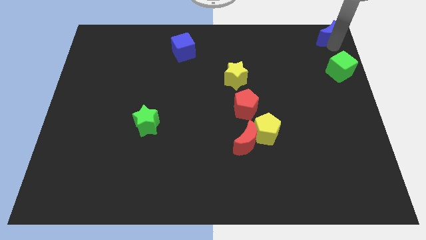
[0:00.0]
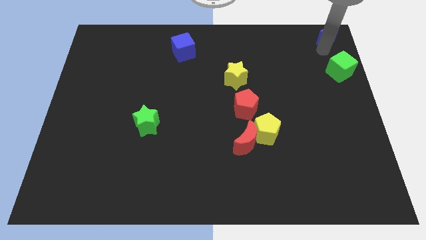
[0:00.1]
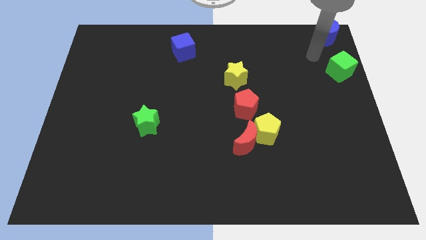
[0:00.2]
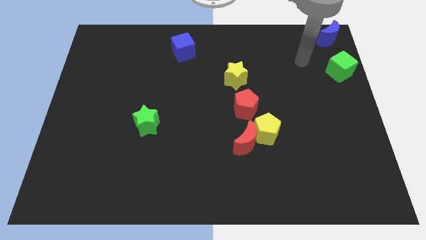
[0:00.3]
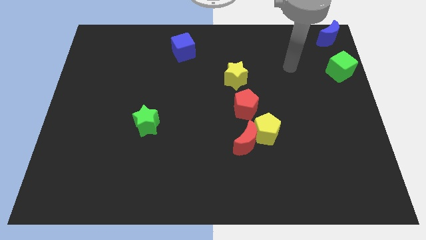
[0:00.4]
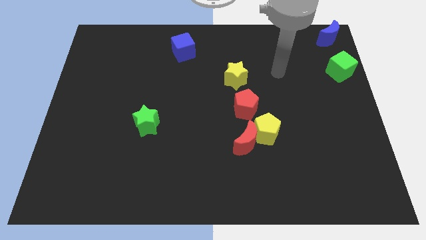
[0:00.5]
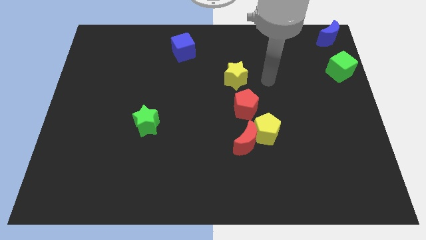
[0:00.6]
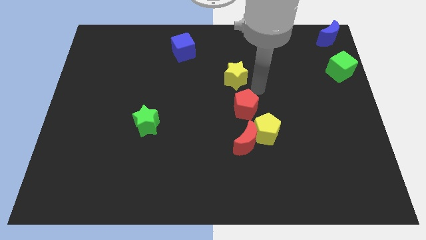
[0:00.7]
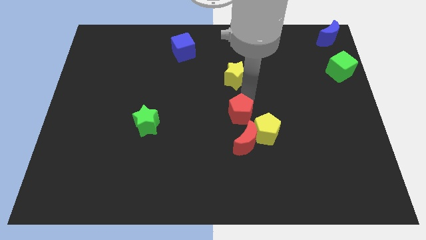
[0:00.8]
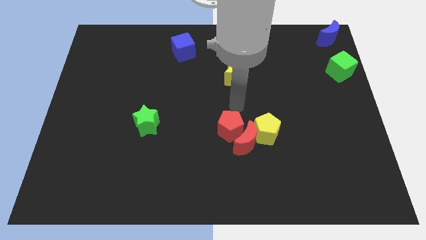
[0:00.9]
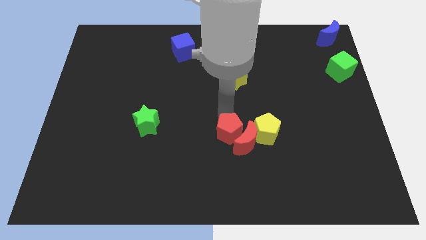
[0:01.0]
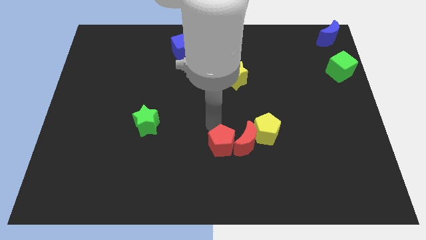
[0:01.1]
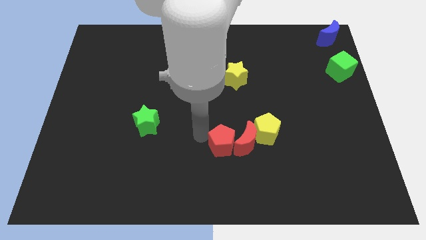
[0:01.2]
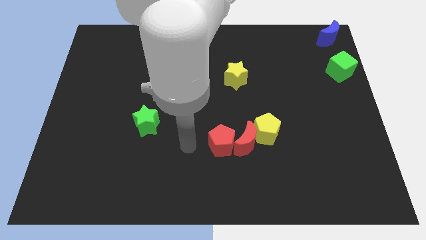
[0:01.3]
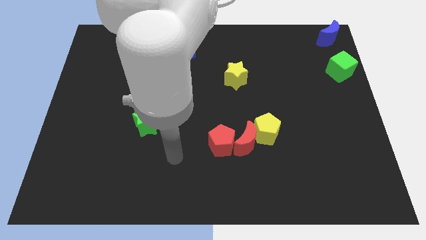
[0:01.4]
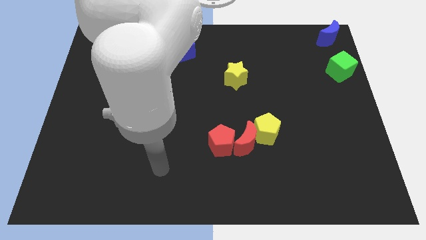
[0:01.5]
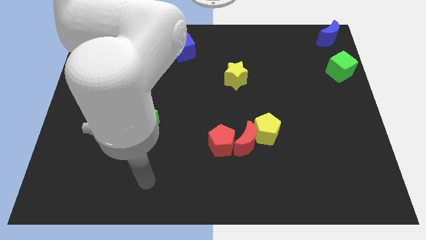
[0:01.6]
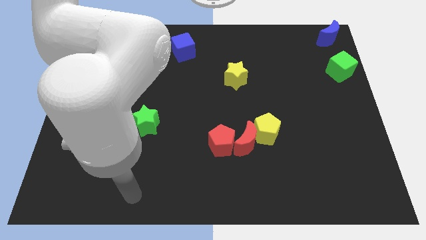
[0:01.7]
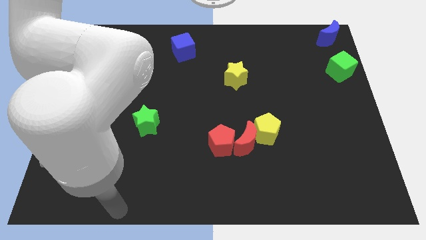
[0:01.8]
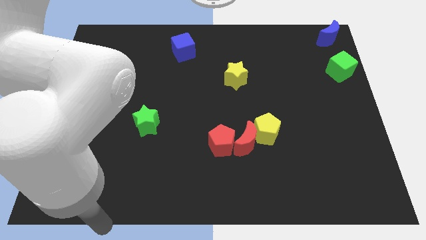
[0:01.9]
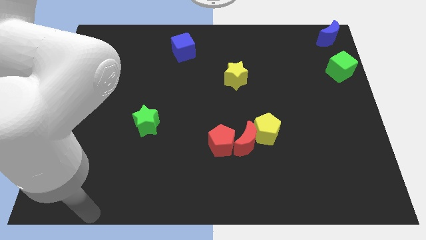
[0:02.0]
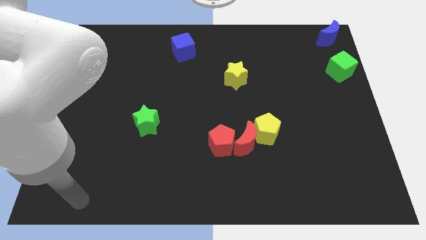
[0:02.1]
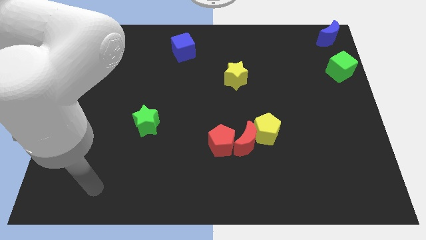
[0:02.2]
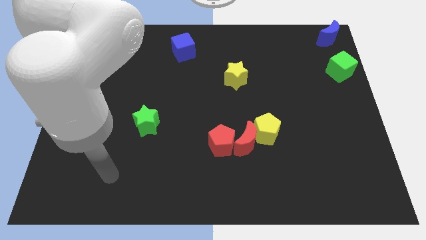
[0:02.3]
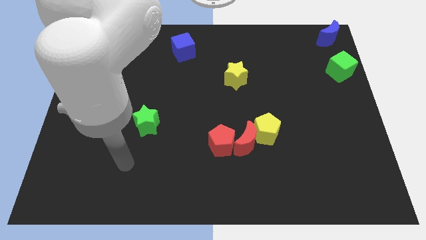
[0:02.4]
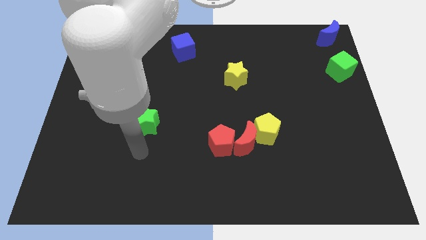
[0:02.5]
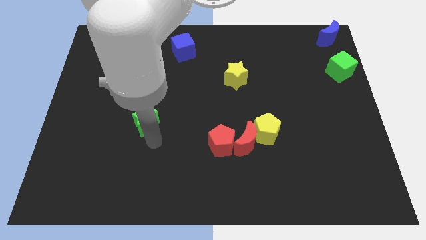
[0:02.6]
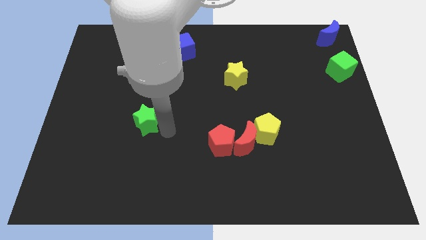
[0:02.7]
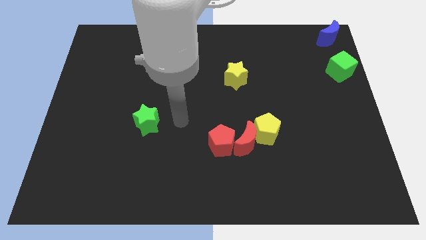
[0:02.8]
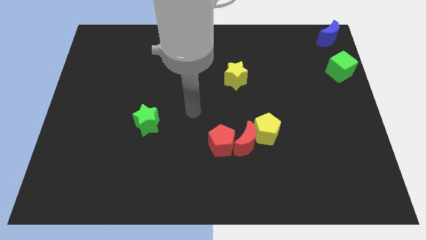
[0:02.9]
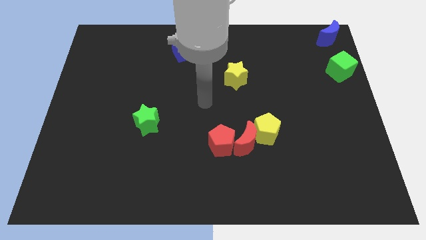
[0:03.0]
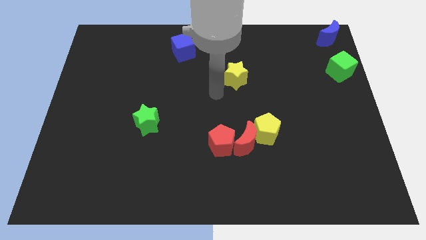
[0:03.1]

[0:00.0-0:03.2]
push the red pentagon to the left of the red moon

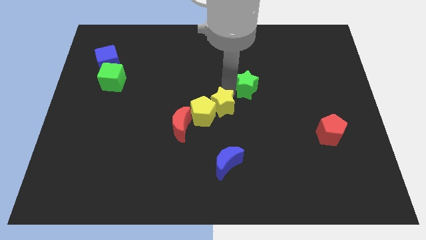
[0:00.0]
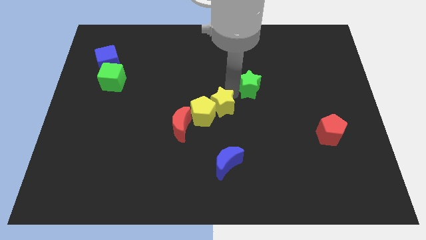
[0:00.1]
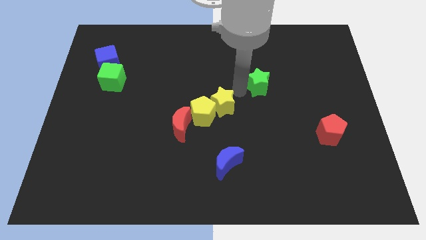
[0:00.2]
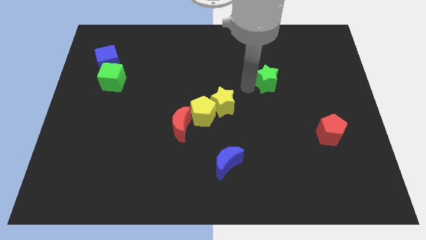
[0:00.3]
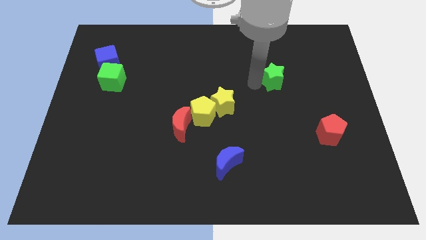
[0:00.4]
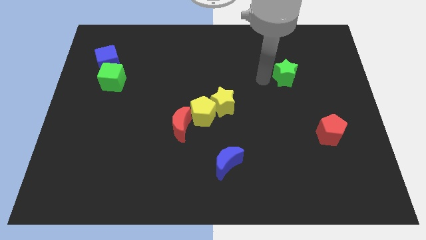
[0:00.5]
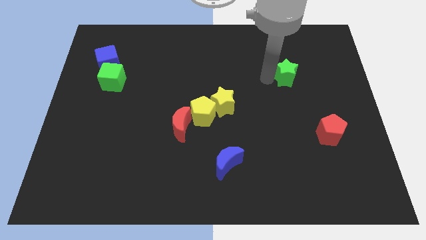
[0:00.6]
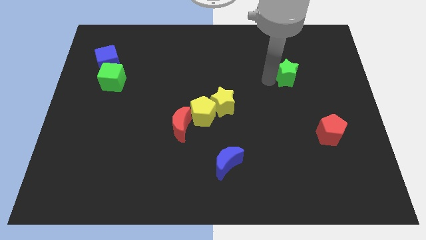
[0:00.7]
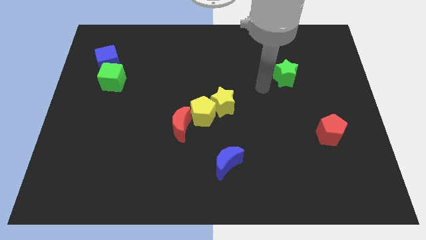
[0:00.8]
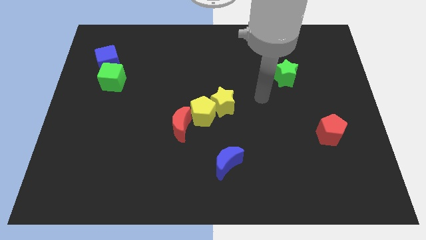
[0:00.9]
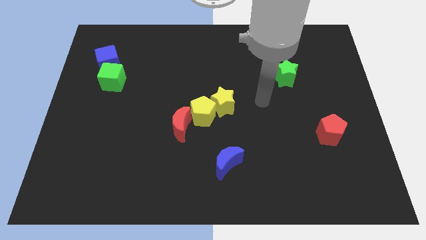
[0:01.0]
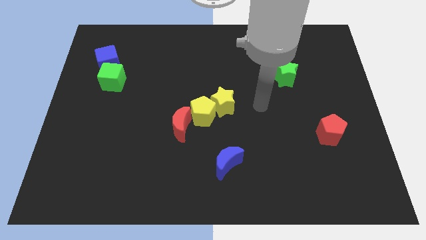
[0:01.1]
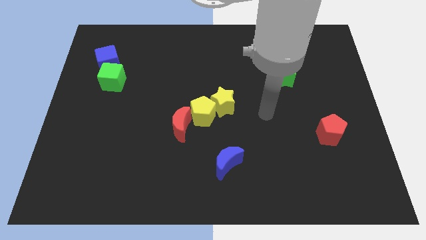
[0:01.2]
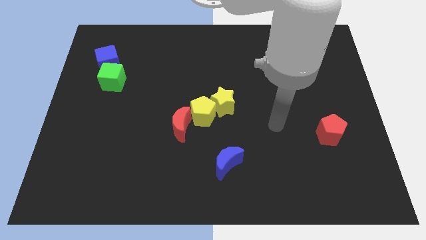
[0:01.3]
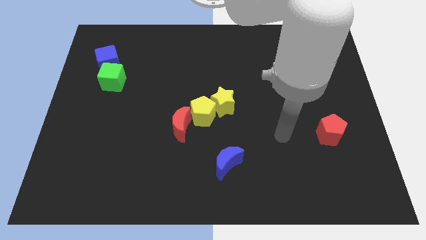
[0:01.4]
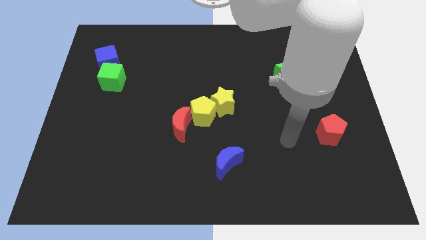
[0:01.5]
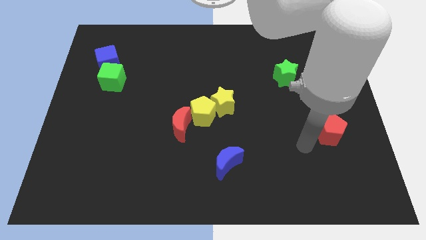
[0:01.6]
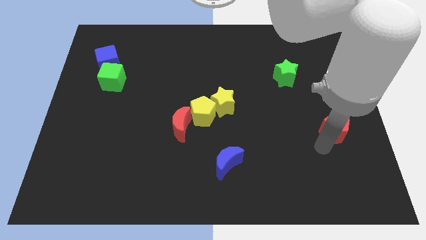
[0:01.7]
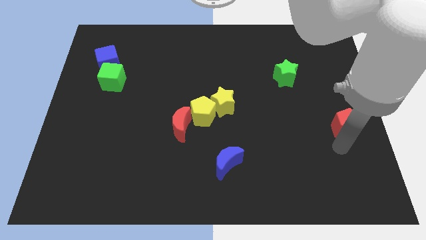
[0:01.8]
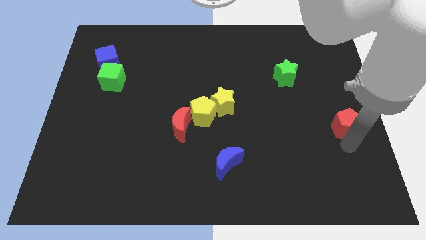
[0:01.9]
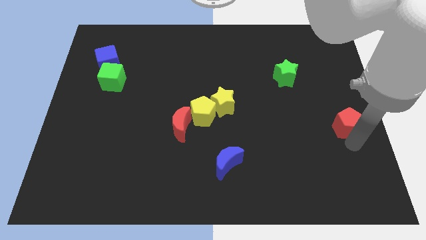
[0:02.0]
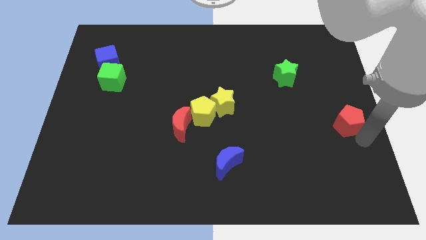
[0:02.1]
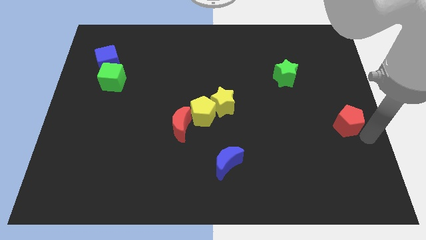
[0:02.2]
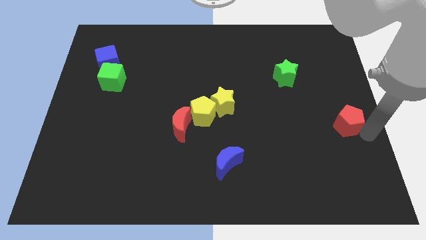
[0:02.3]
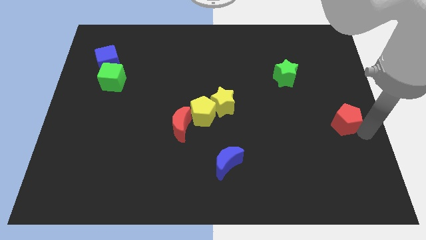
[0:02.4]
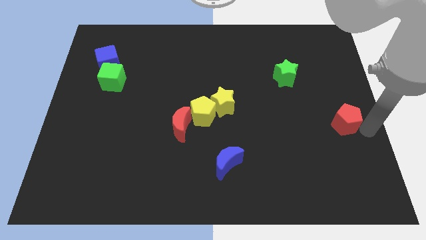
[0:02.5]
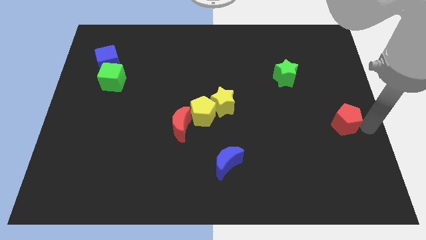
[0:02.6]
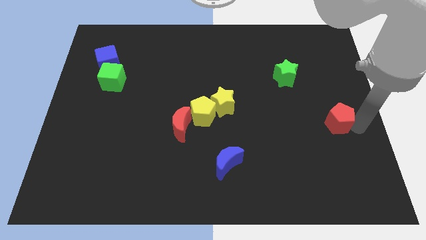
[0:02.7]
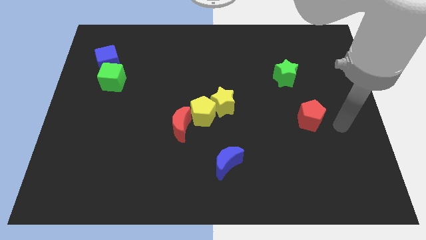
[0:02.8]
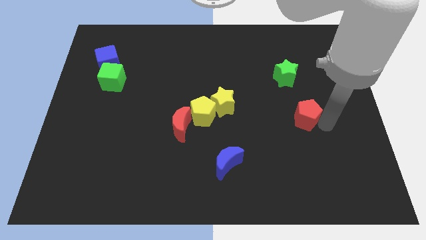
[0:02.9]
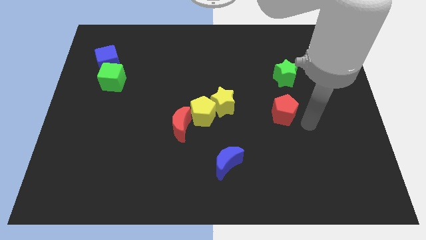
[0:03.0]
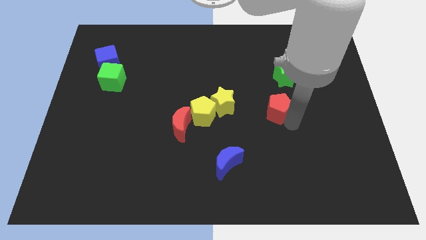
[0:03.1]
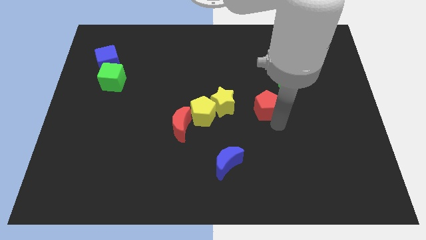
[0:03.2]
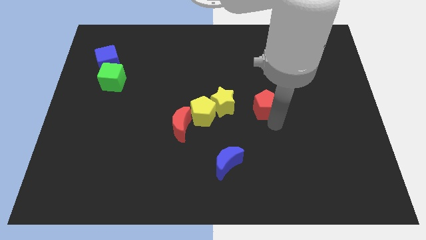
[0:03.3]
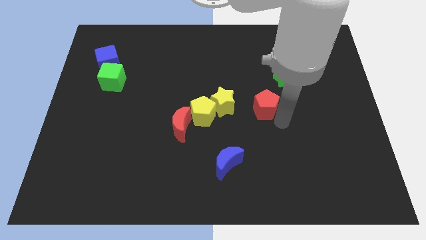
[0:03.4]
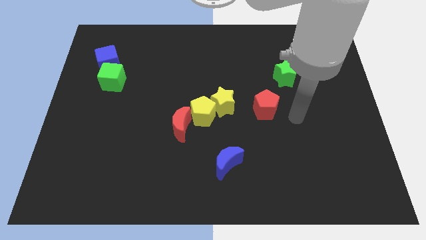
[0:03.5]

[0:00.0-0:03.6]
push the red pentagon diagnol to the green star

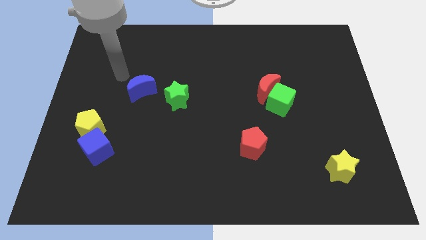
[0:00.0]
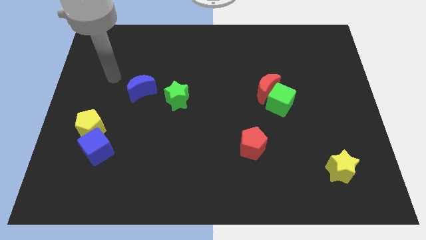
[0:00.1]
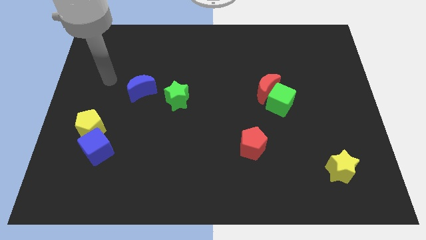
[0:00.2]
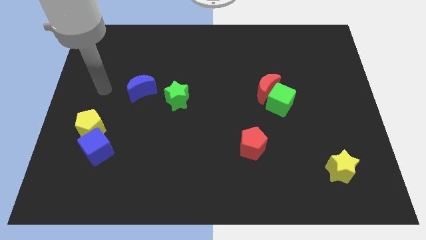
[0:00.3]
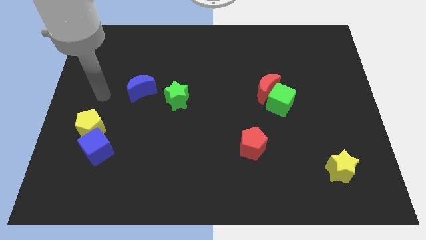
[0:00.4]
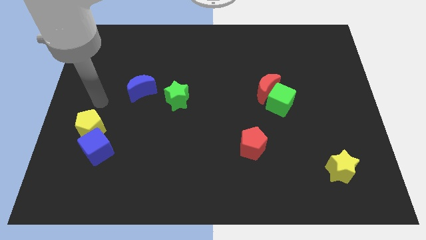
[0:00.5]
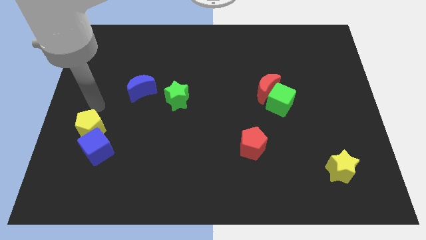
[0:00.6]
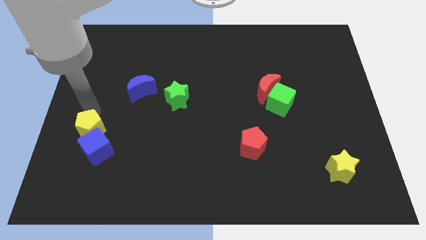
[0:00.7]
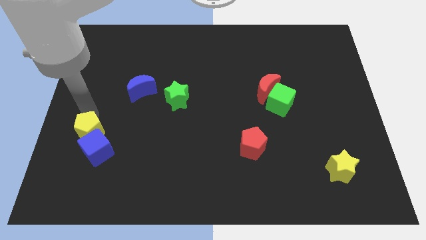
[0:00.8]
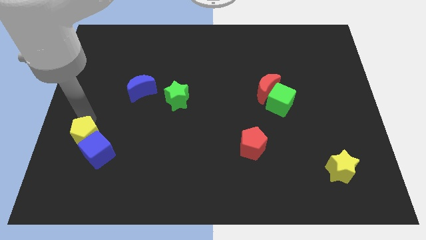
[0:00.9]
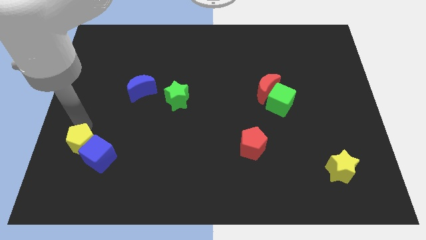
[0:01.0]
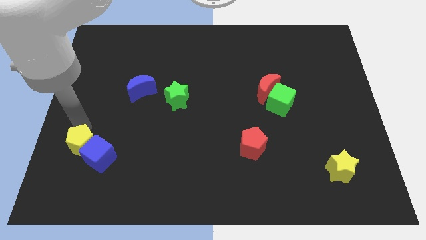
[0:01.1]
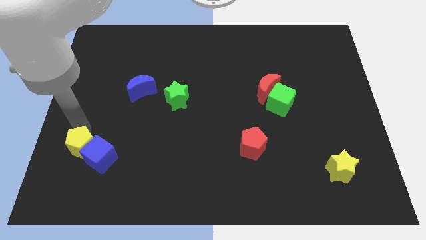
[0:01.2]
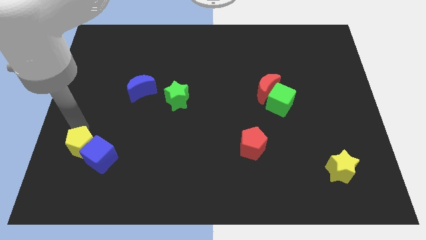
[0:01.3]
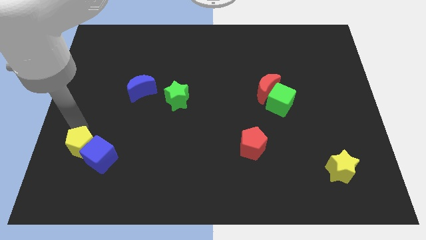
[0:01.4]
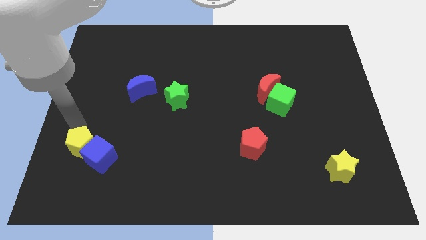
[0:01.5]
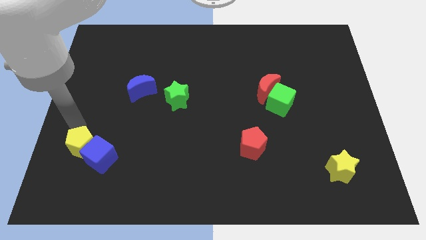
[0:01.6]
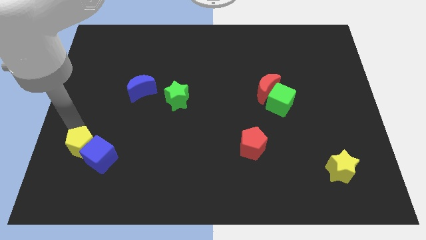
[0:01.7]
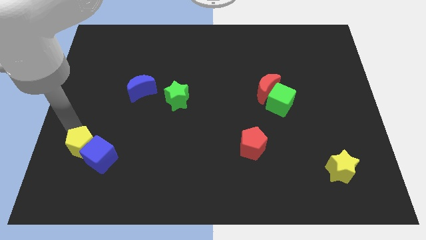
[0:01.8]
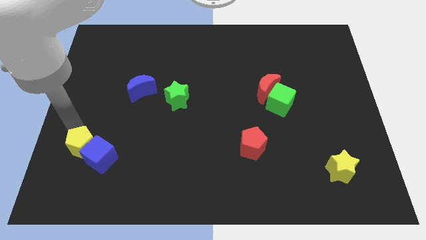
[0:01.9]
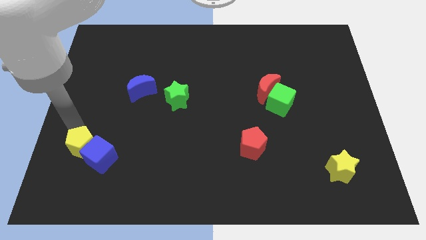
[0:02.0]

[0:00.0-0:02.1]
push the yellow pentagon and blue cube towards the bottom
